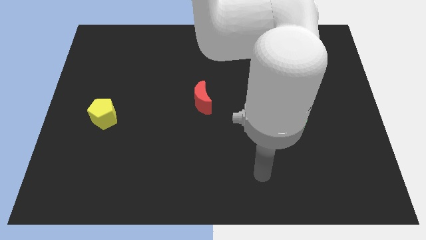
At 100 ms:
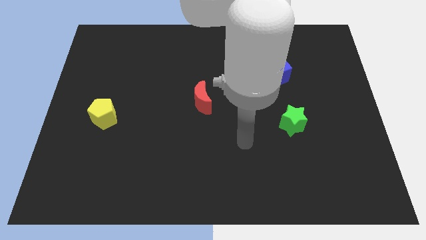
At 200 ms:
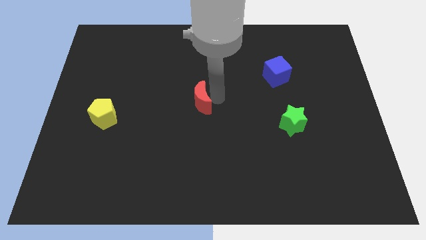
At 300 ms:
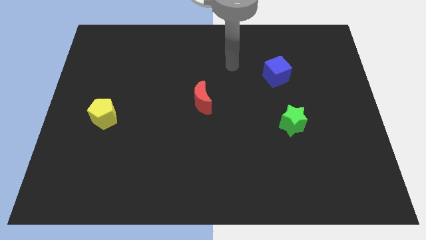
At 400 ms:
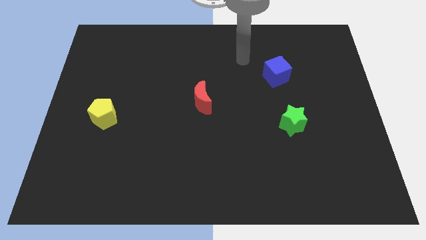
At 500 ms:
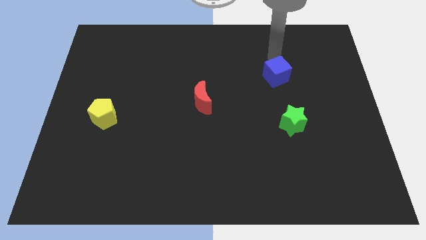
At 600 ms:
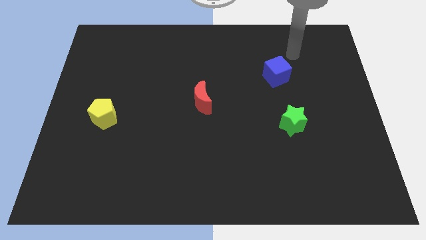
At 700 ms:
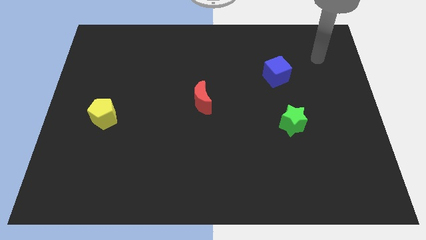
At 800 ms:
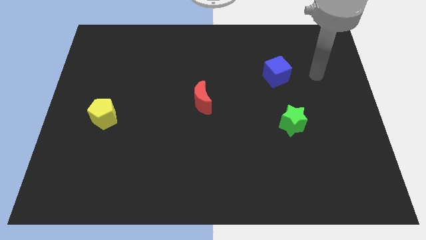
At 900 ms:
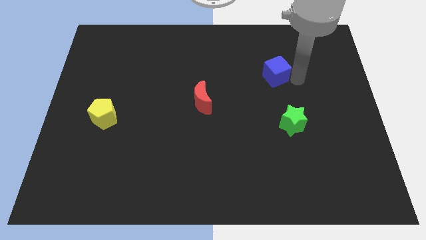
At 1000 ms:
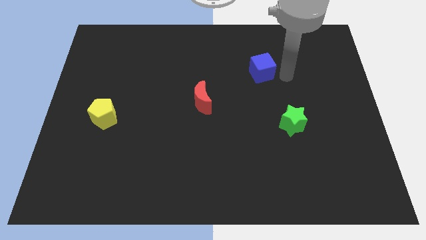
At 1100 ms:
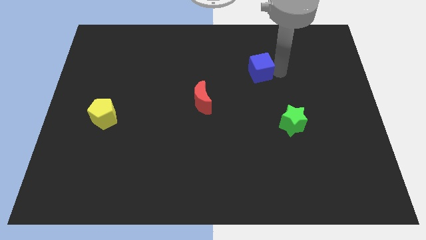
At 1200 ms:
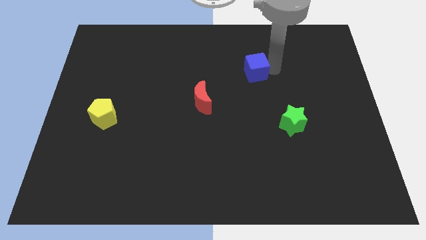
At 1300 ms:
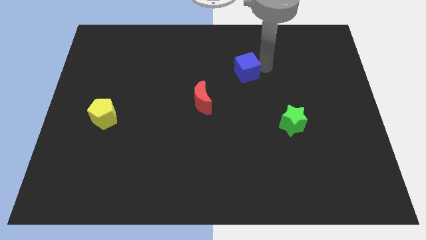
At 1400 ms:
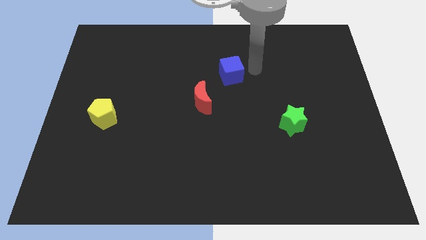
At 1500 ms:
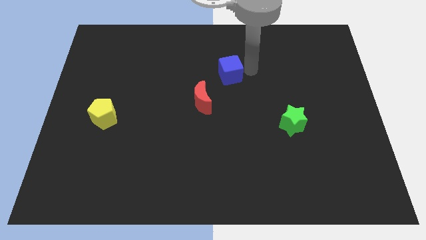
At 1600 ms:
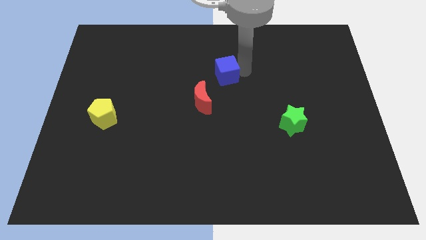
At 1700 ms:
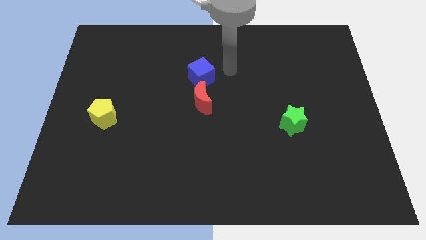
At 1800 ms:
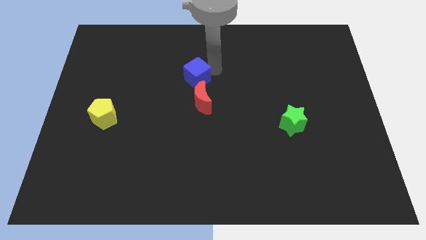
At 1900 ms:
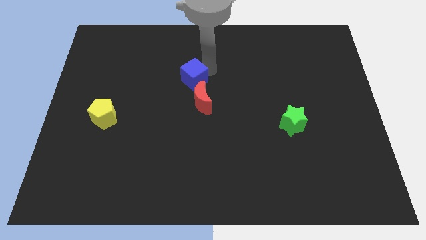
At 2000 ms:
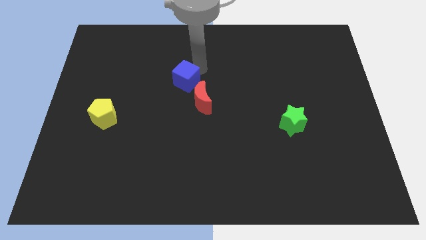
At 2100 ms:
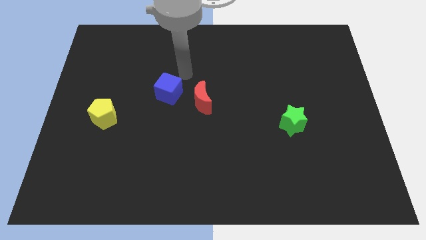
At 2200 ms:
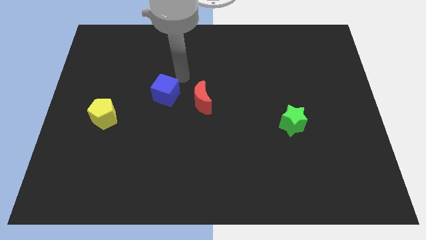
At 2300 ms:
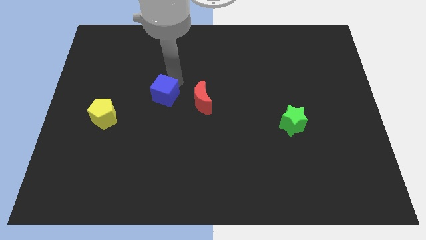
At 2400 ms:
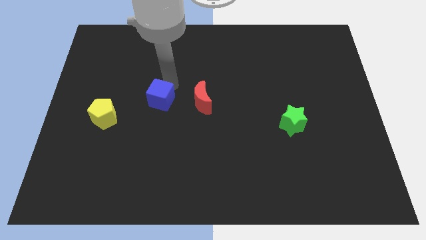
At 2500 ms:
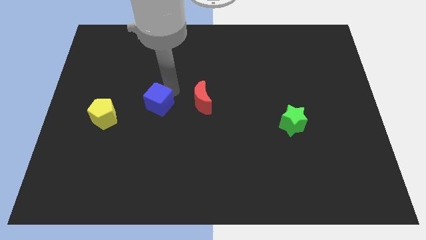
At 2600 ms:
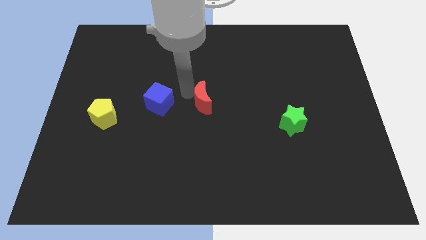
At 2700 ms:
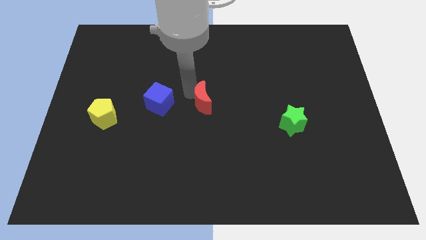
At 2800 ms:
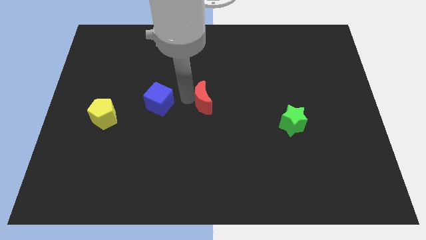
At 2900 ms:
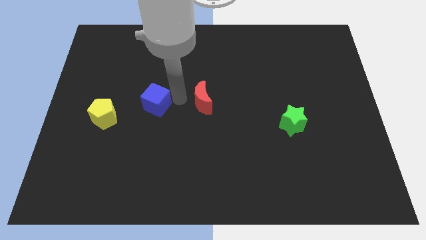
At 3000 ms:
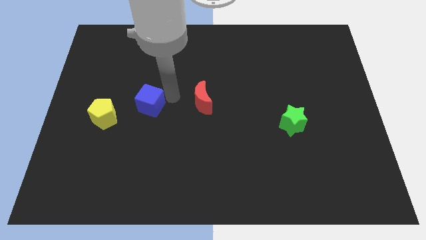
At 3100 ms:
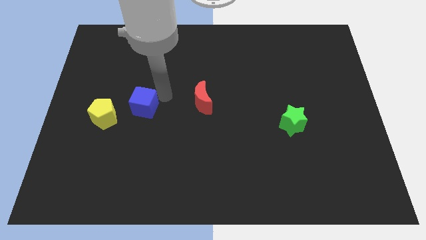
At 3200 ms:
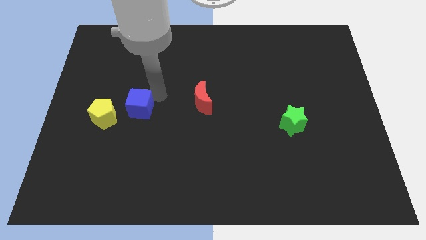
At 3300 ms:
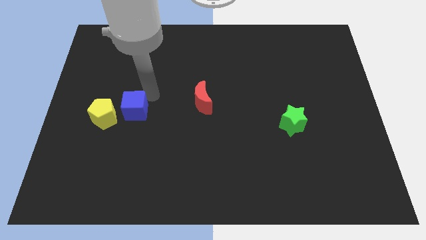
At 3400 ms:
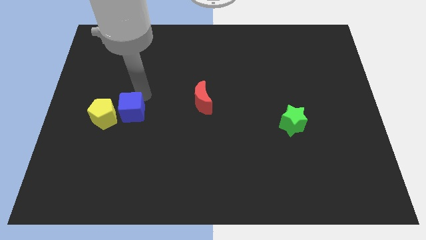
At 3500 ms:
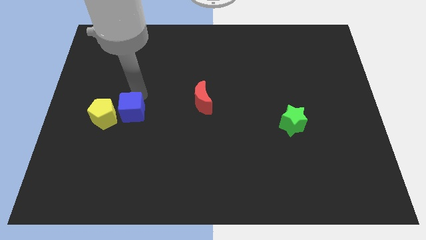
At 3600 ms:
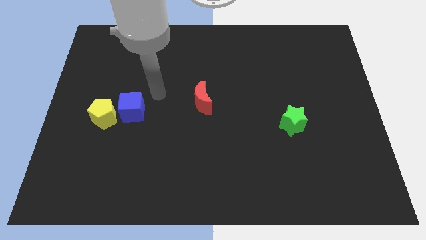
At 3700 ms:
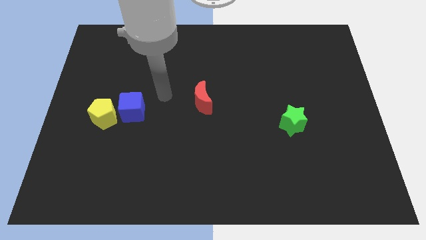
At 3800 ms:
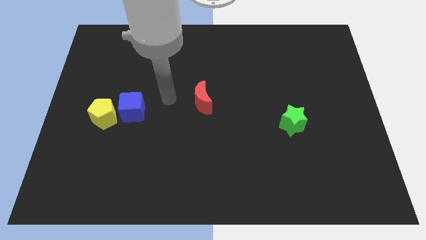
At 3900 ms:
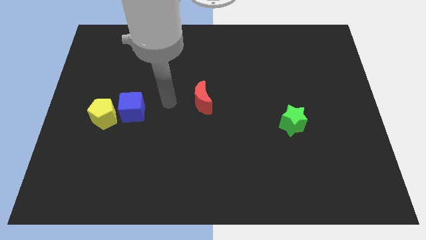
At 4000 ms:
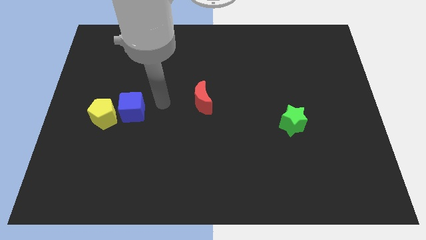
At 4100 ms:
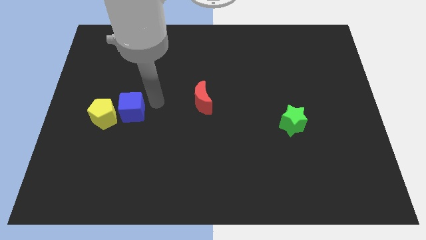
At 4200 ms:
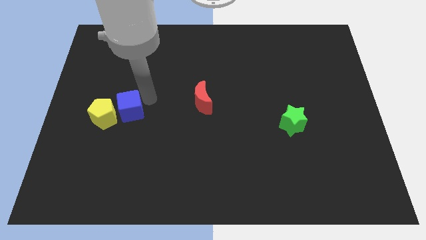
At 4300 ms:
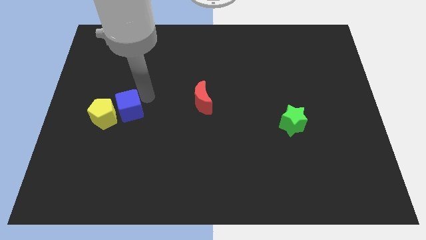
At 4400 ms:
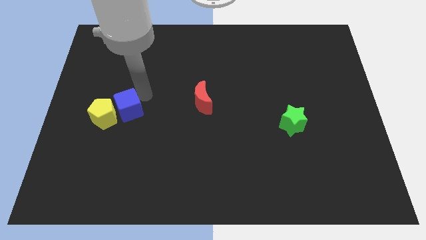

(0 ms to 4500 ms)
move the blue cube towards the pentagon

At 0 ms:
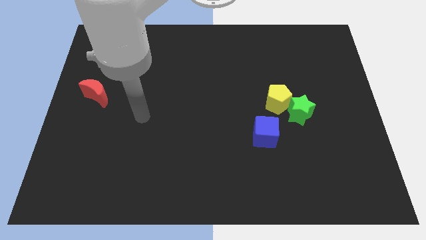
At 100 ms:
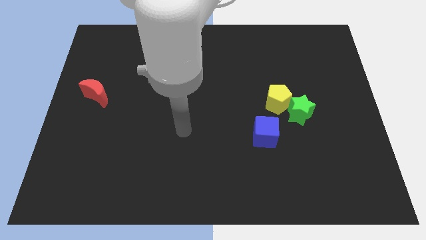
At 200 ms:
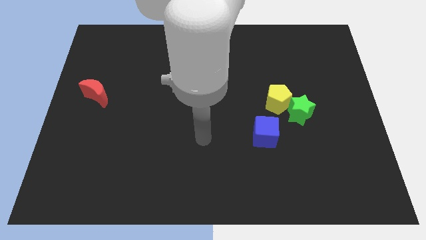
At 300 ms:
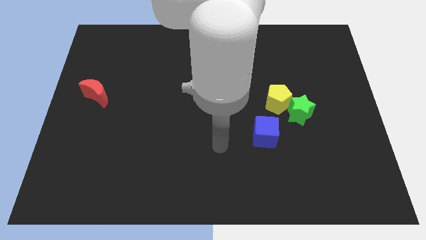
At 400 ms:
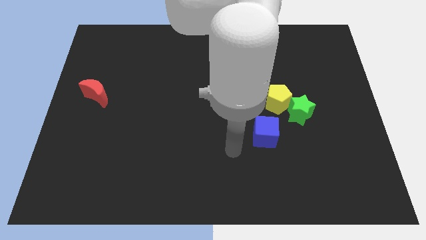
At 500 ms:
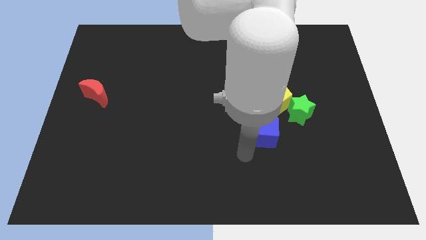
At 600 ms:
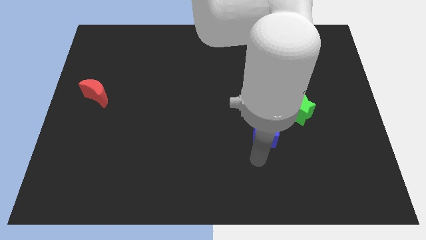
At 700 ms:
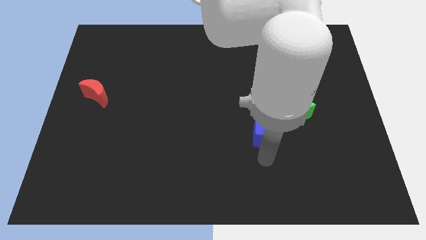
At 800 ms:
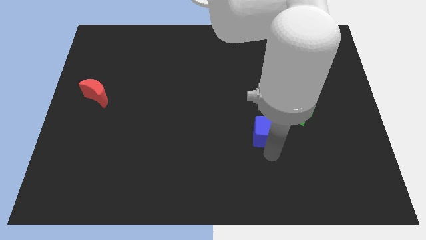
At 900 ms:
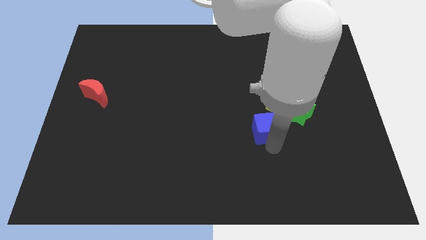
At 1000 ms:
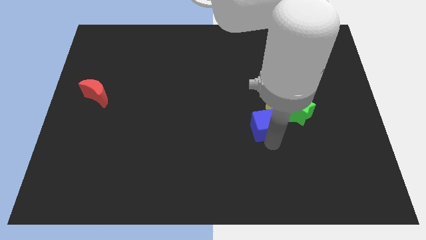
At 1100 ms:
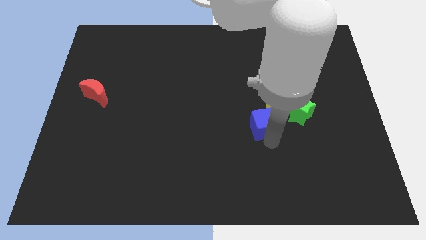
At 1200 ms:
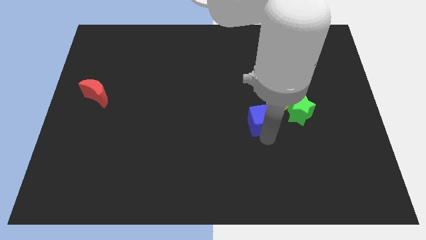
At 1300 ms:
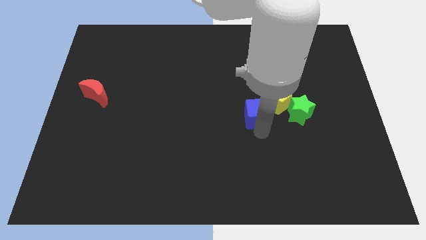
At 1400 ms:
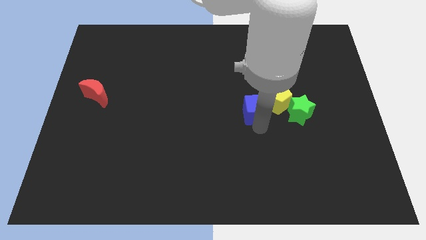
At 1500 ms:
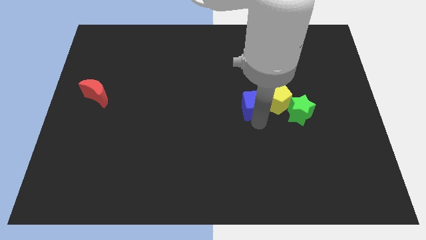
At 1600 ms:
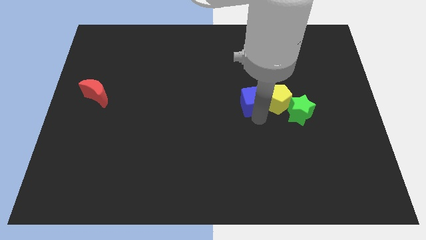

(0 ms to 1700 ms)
slide the blue cube towards the yellow block

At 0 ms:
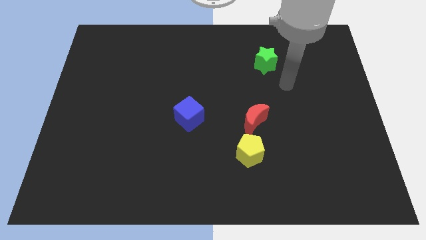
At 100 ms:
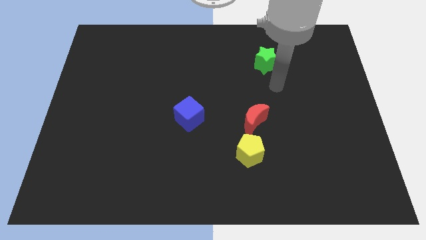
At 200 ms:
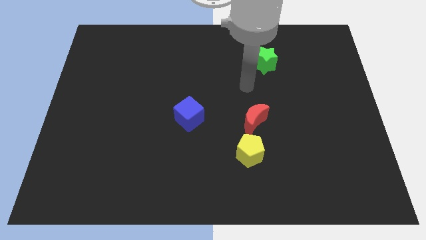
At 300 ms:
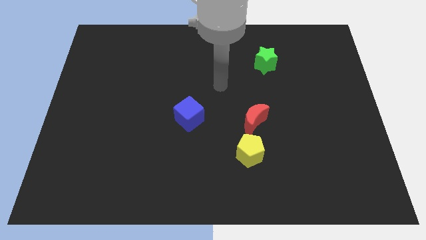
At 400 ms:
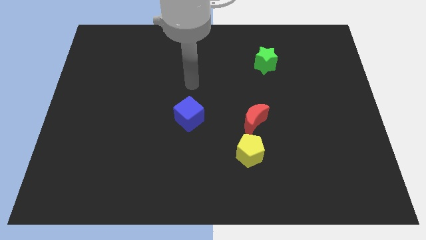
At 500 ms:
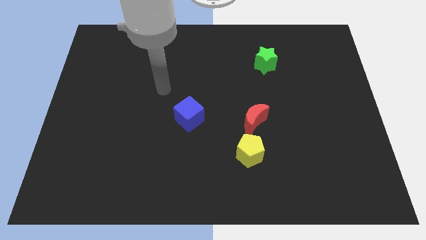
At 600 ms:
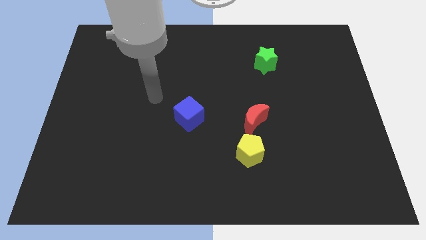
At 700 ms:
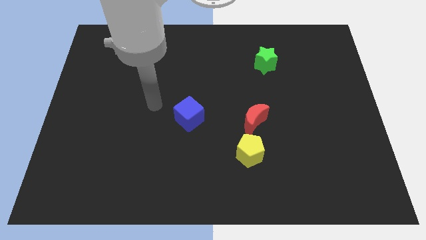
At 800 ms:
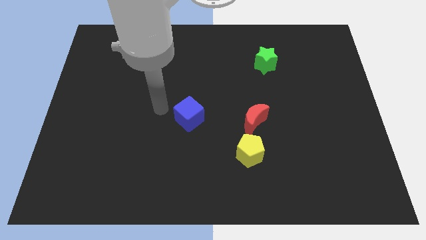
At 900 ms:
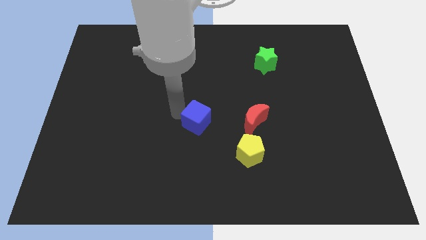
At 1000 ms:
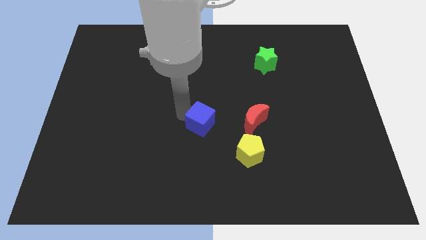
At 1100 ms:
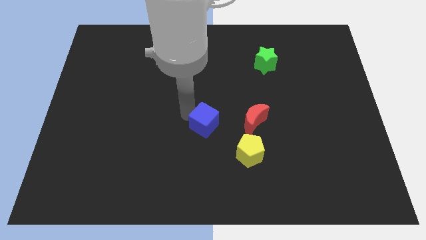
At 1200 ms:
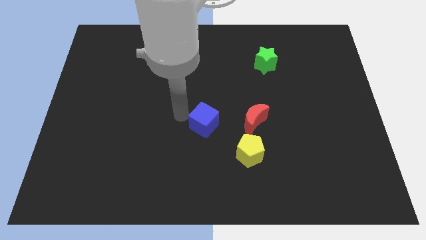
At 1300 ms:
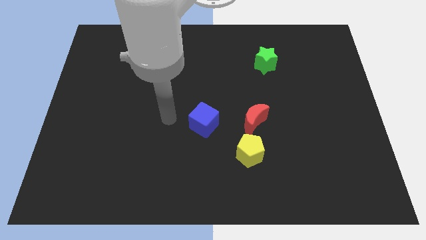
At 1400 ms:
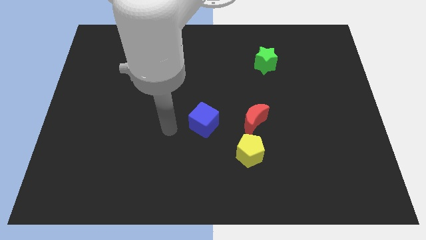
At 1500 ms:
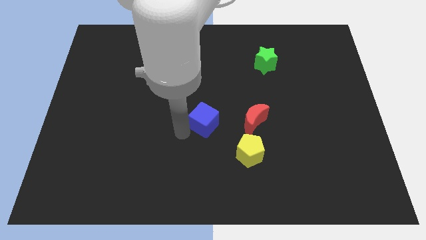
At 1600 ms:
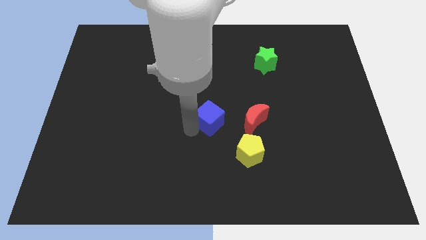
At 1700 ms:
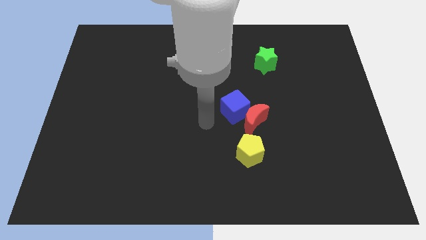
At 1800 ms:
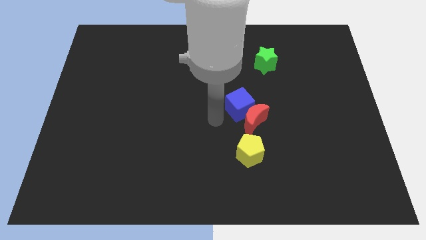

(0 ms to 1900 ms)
slide the blue cube close to the red block

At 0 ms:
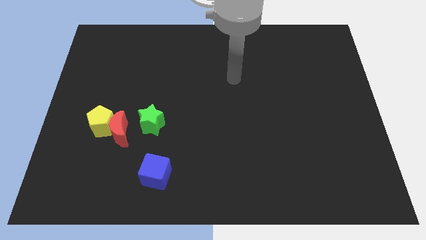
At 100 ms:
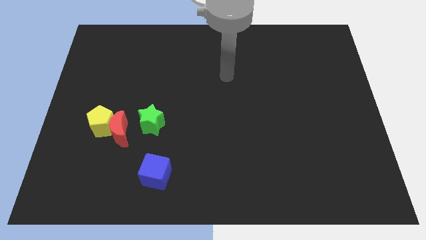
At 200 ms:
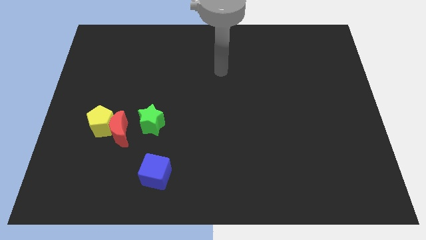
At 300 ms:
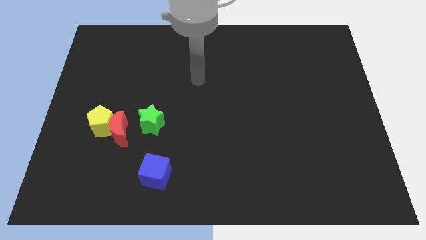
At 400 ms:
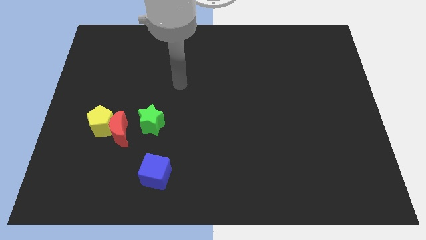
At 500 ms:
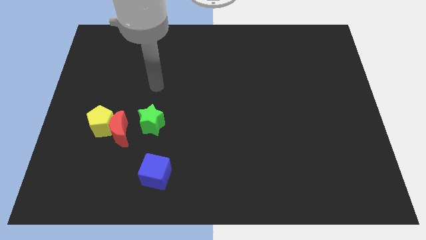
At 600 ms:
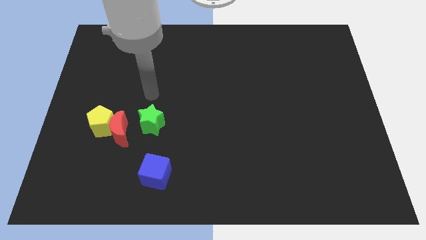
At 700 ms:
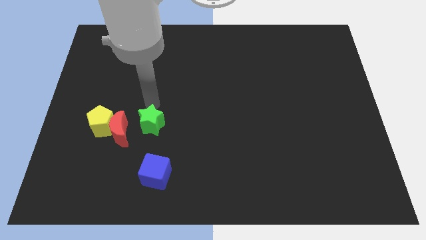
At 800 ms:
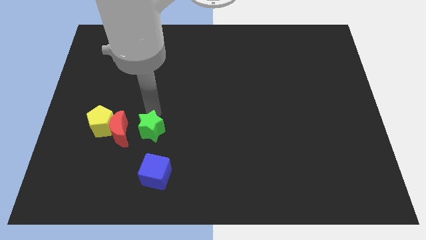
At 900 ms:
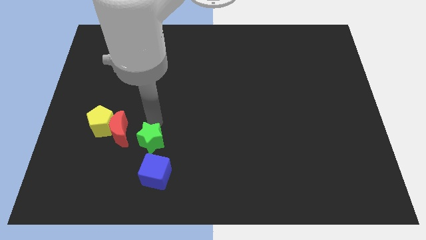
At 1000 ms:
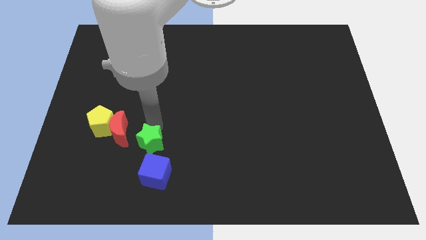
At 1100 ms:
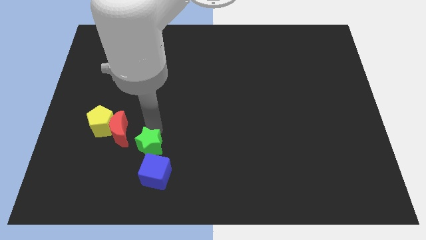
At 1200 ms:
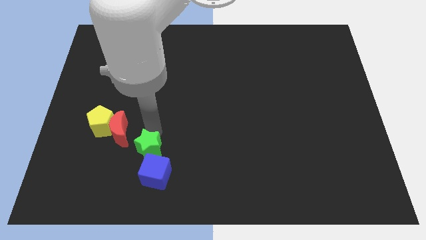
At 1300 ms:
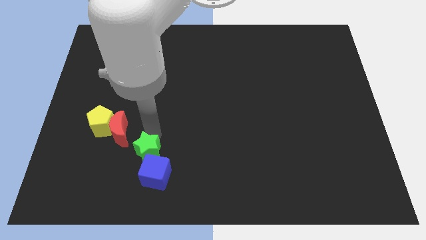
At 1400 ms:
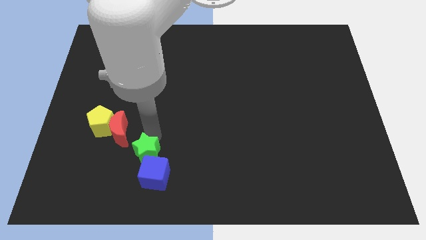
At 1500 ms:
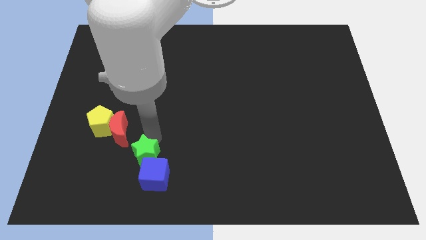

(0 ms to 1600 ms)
slide the green block close to the blue cube
